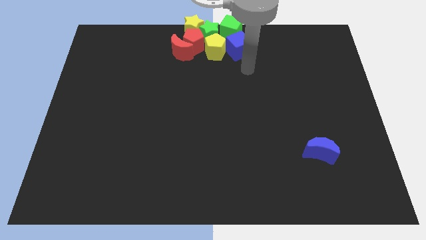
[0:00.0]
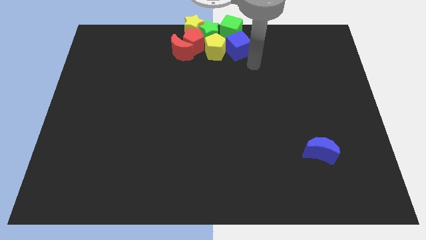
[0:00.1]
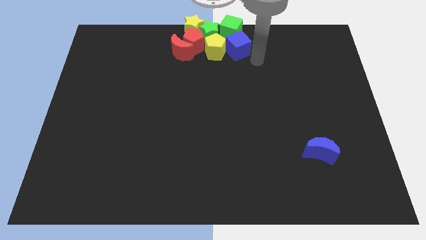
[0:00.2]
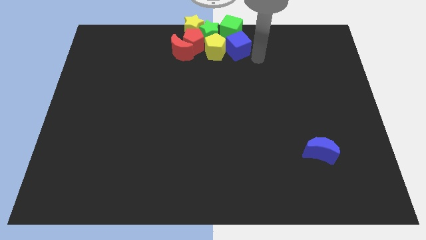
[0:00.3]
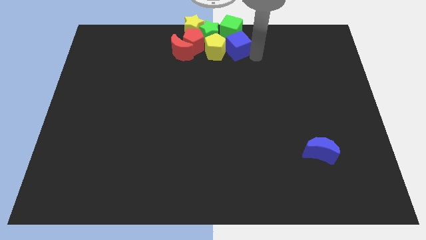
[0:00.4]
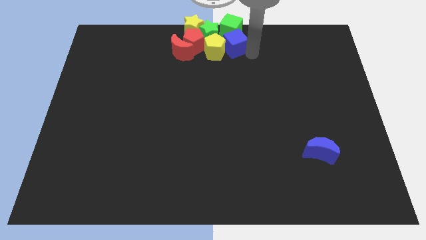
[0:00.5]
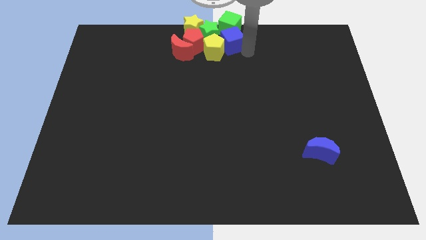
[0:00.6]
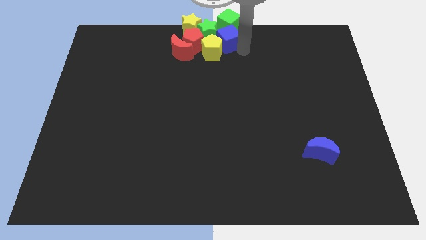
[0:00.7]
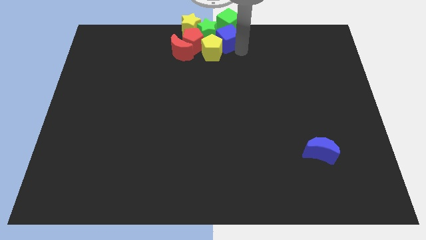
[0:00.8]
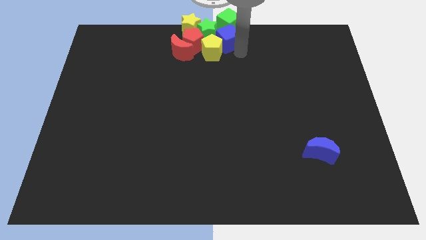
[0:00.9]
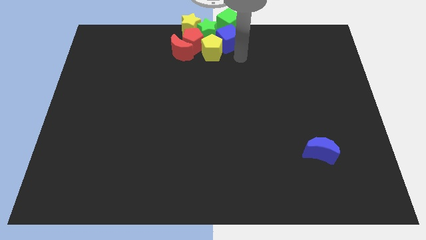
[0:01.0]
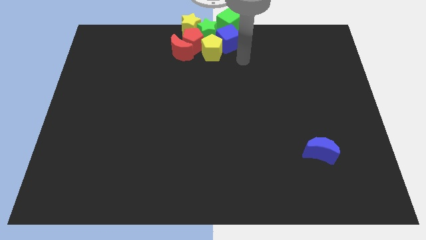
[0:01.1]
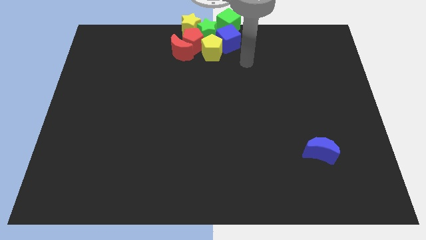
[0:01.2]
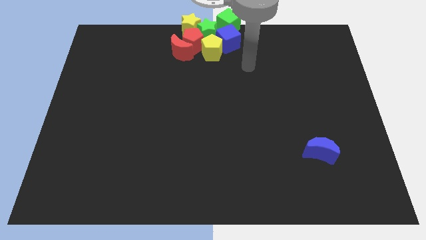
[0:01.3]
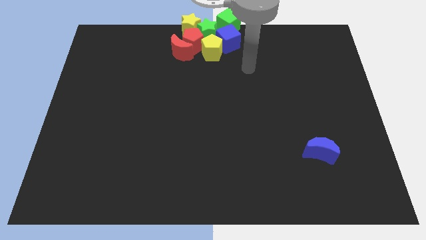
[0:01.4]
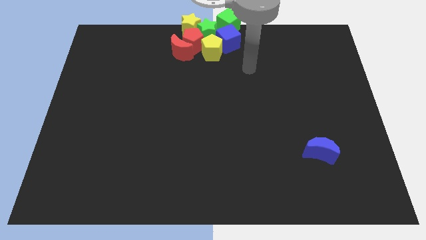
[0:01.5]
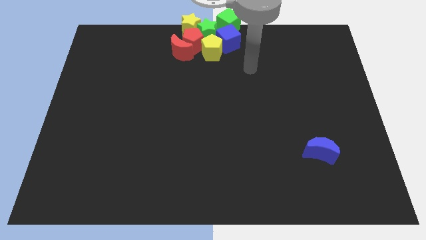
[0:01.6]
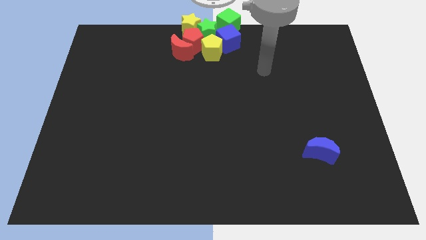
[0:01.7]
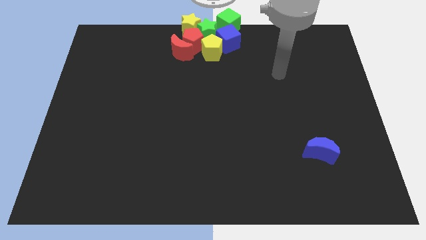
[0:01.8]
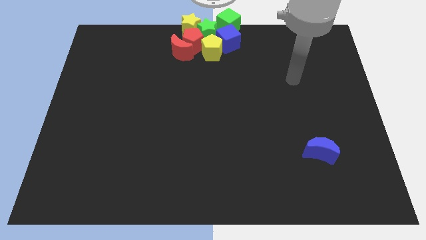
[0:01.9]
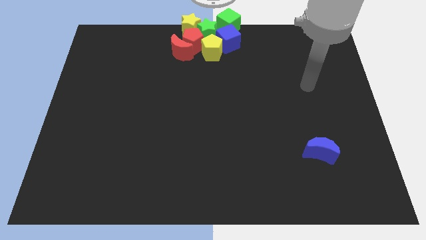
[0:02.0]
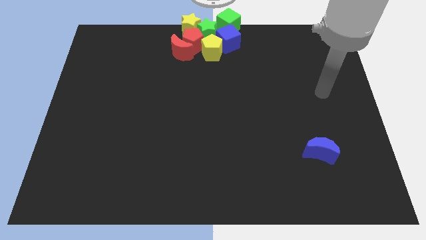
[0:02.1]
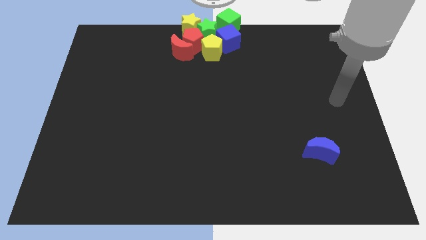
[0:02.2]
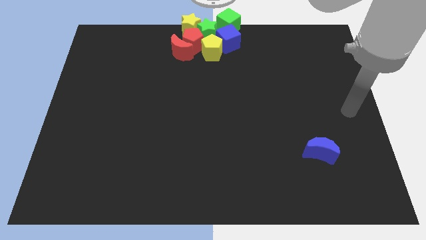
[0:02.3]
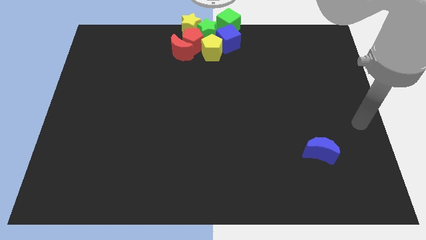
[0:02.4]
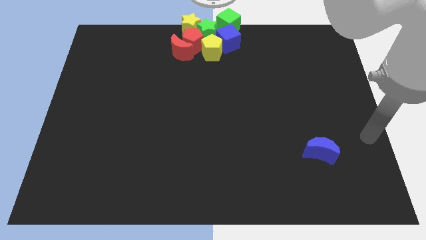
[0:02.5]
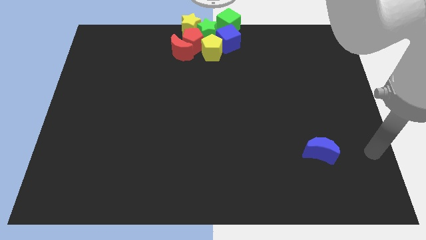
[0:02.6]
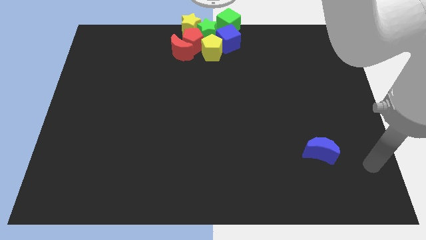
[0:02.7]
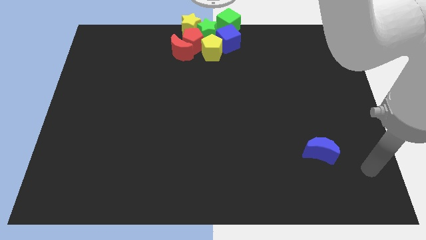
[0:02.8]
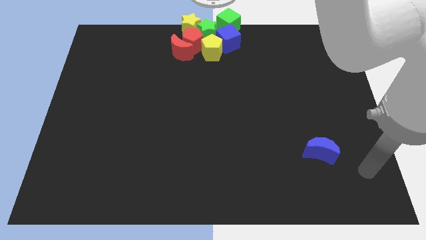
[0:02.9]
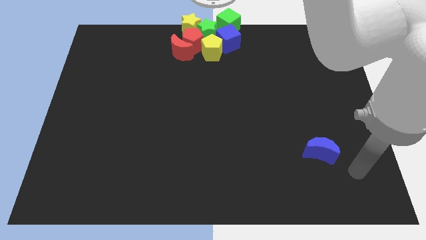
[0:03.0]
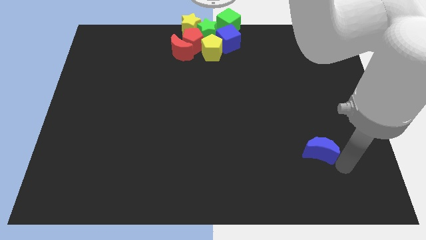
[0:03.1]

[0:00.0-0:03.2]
move the arm to the bottom of the blue crescent

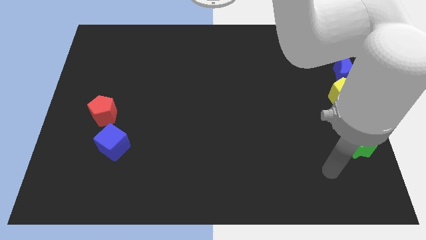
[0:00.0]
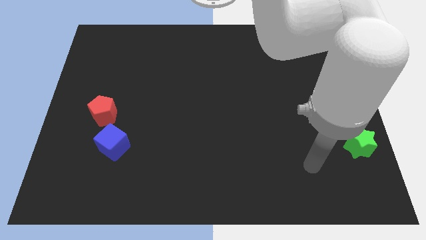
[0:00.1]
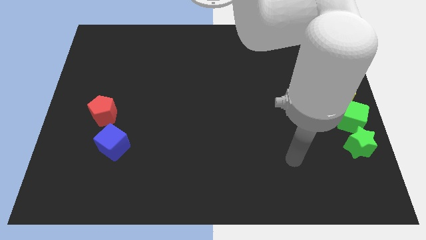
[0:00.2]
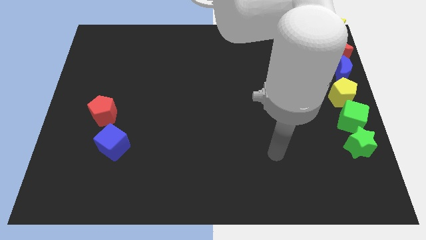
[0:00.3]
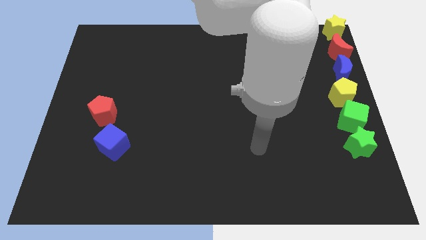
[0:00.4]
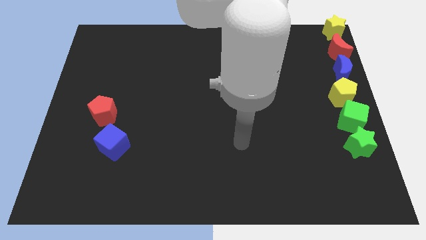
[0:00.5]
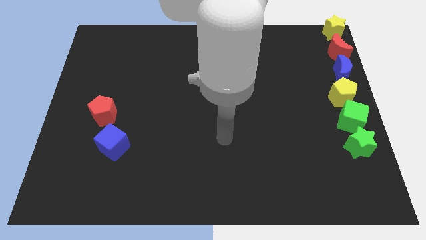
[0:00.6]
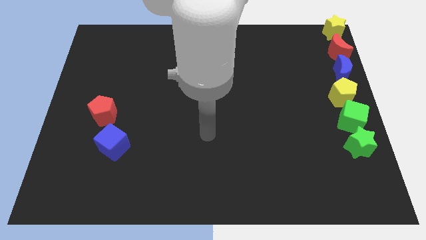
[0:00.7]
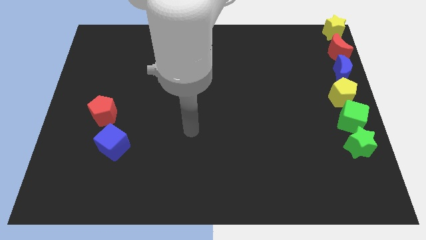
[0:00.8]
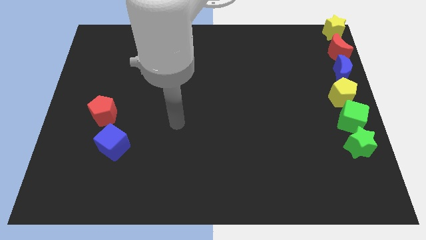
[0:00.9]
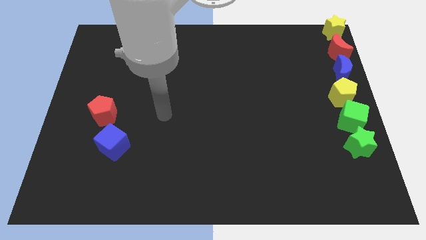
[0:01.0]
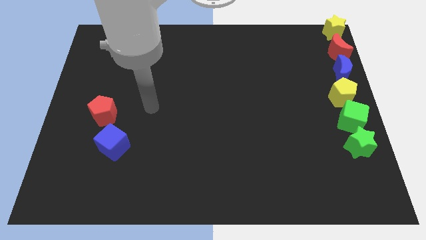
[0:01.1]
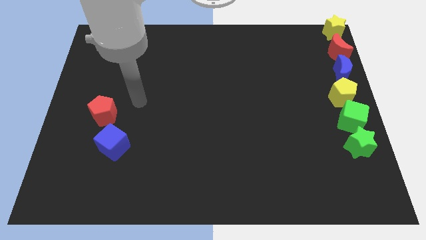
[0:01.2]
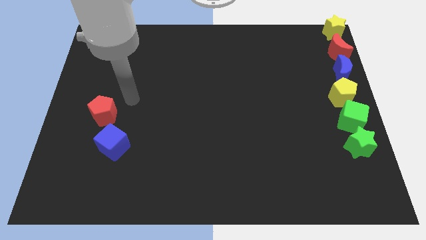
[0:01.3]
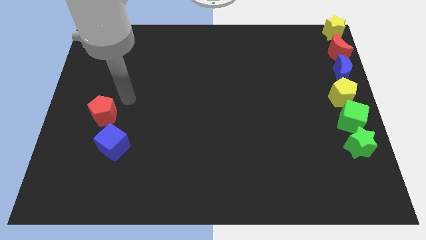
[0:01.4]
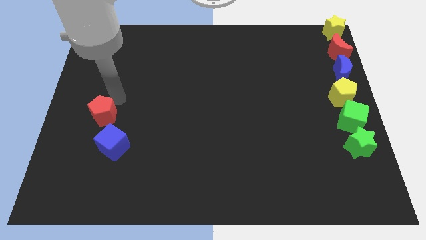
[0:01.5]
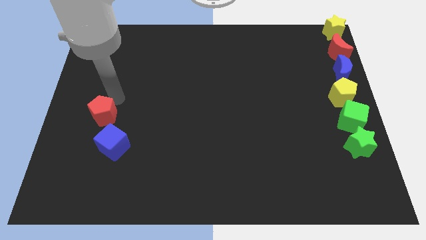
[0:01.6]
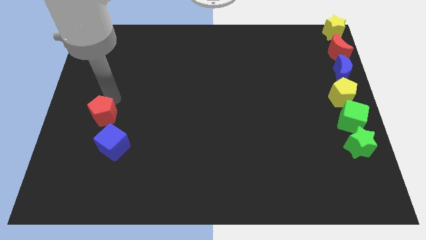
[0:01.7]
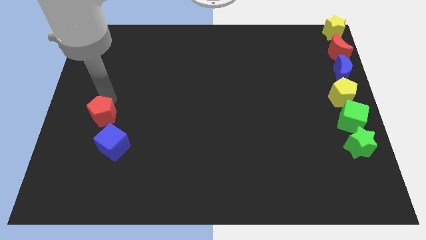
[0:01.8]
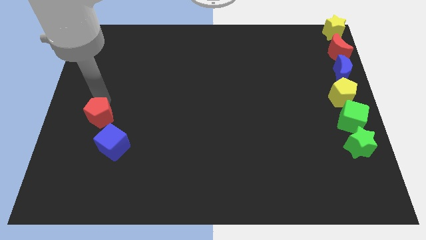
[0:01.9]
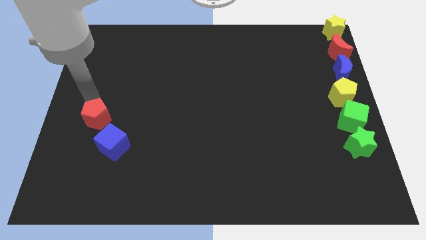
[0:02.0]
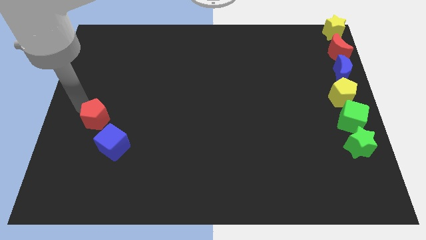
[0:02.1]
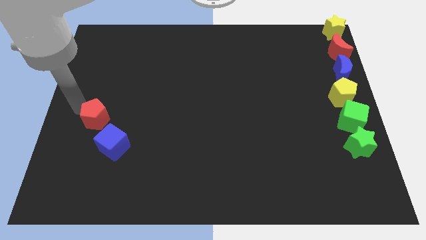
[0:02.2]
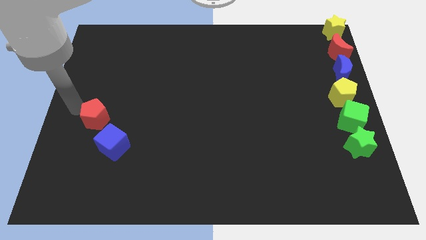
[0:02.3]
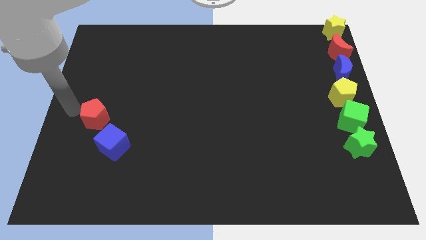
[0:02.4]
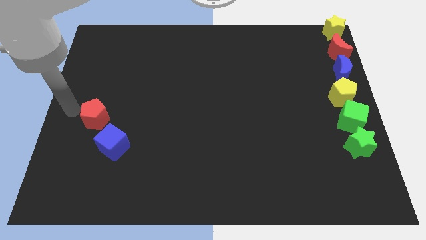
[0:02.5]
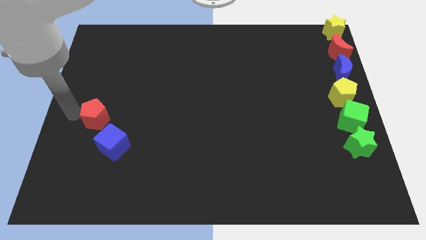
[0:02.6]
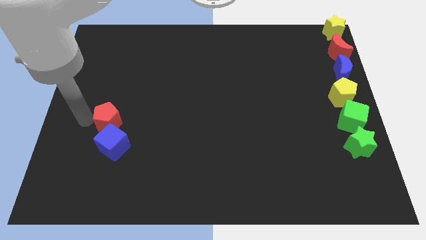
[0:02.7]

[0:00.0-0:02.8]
move the red pentagon slightly to the right

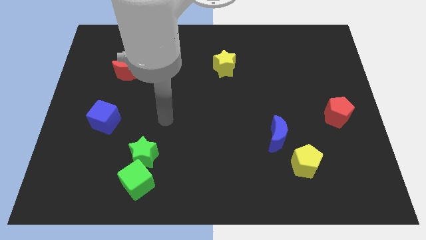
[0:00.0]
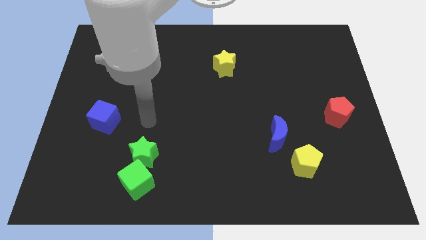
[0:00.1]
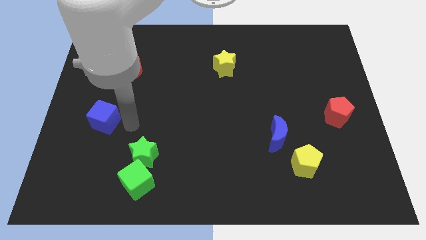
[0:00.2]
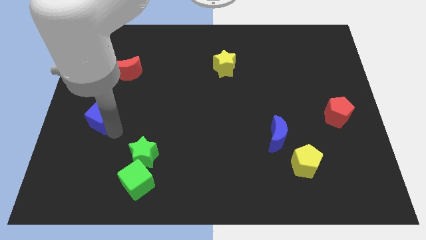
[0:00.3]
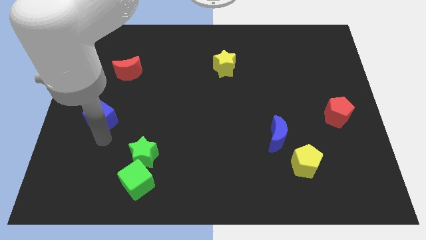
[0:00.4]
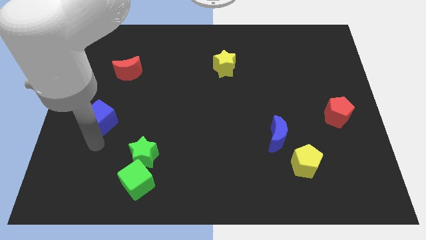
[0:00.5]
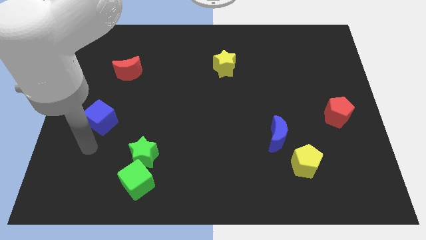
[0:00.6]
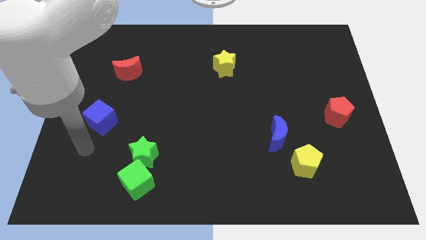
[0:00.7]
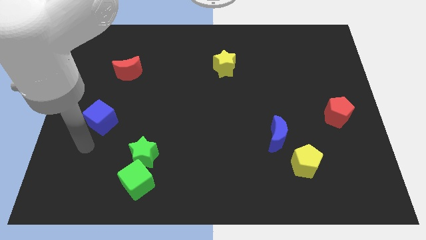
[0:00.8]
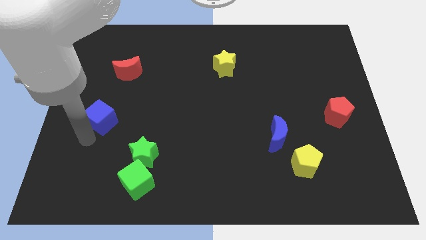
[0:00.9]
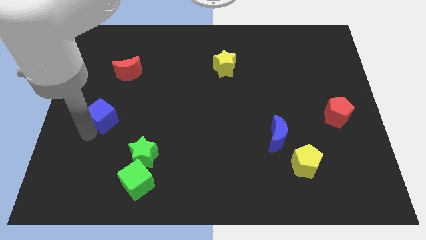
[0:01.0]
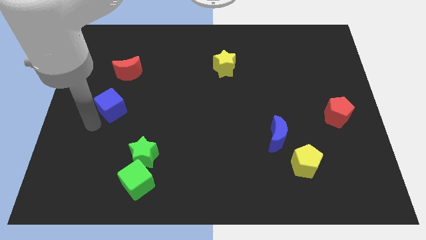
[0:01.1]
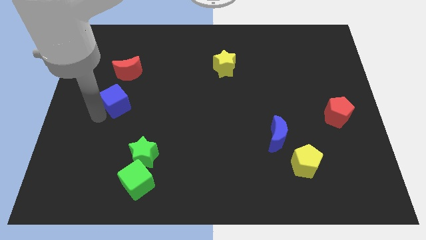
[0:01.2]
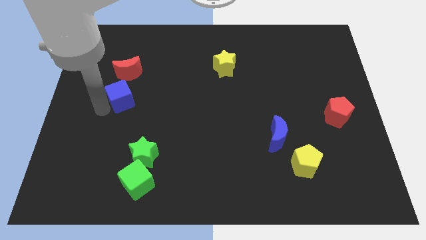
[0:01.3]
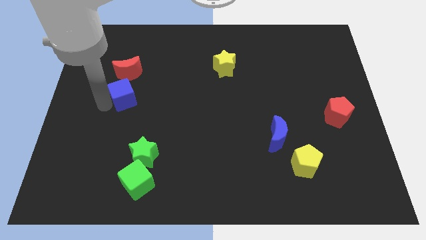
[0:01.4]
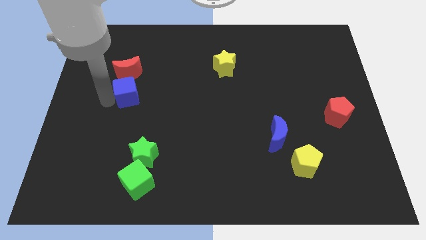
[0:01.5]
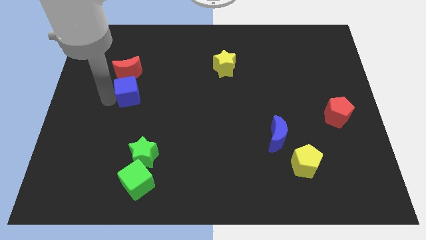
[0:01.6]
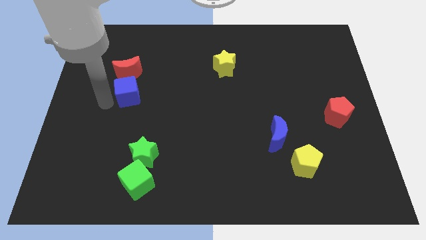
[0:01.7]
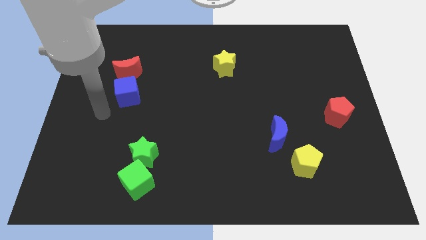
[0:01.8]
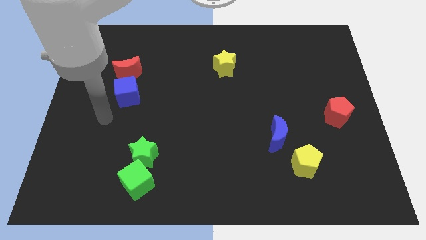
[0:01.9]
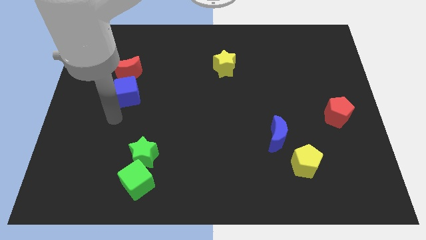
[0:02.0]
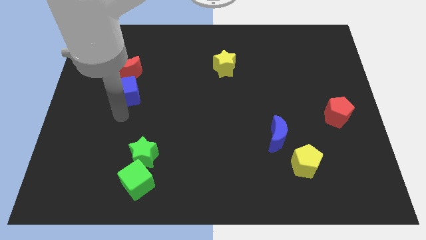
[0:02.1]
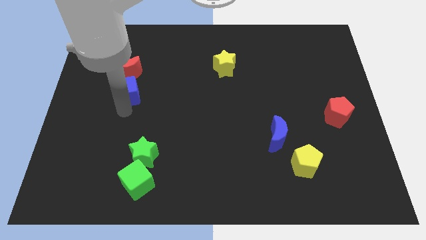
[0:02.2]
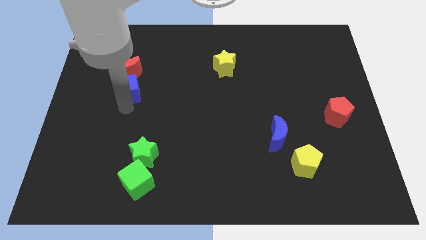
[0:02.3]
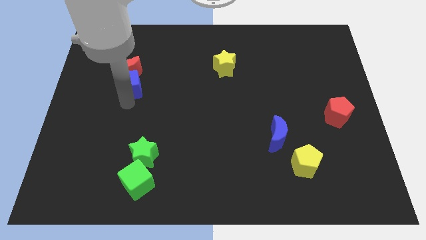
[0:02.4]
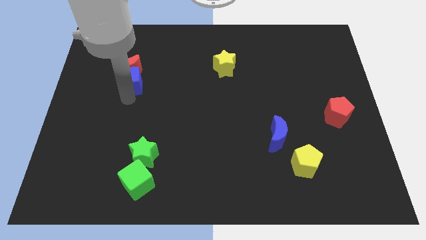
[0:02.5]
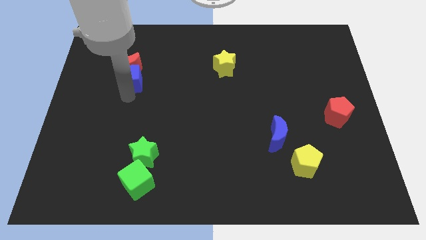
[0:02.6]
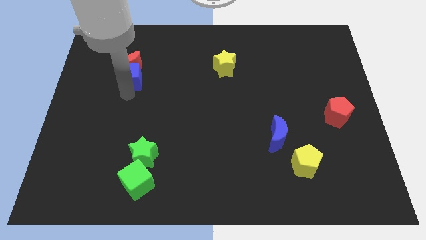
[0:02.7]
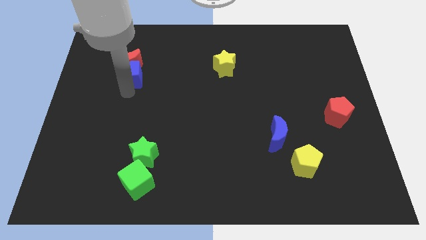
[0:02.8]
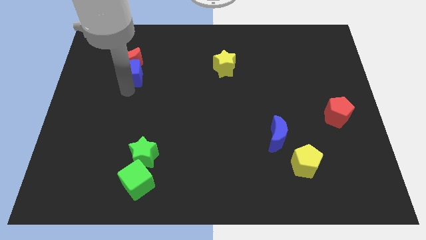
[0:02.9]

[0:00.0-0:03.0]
push the blue cube into the red moon

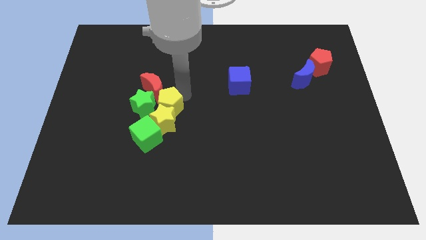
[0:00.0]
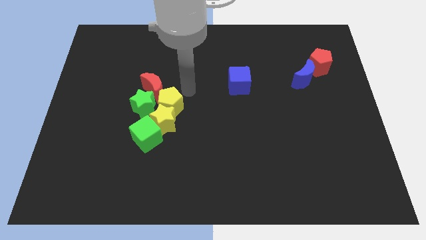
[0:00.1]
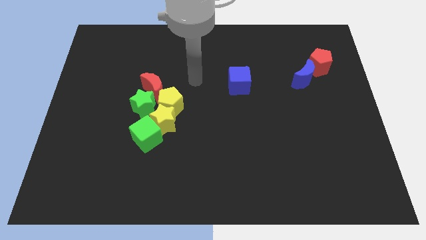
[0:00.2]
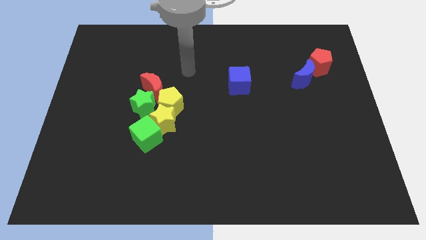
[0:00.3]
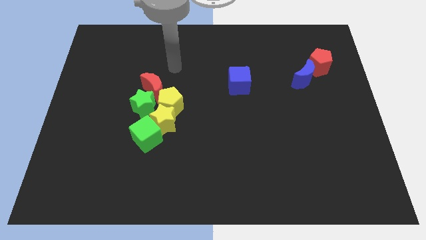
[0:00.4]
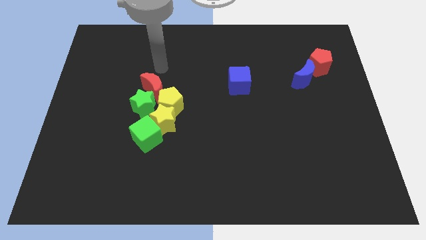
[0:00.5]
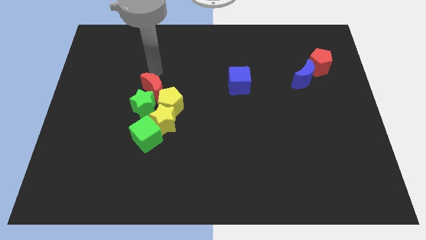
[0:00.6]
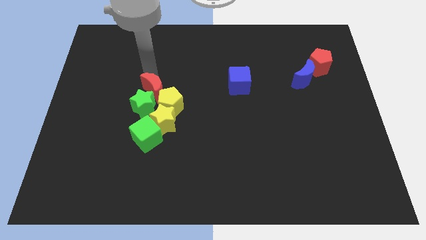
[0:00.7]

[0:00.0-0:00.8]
move your arm to the top of the red crescent
